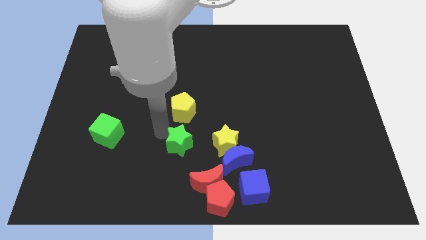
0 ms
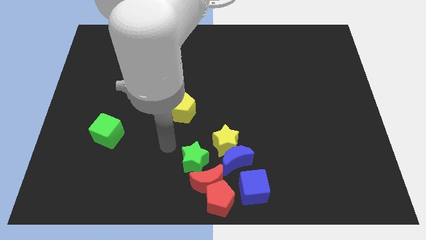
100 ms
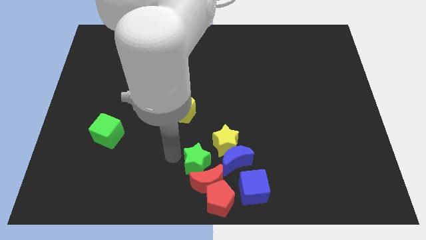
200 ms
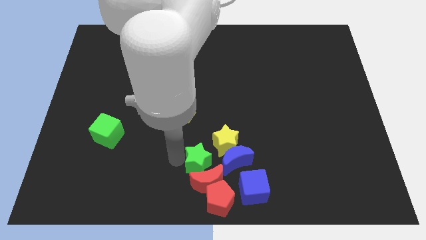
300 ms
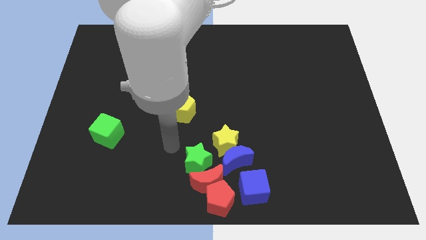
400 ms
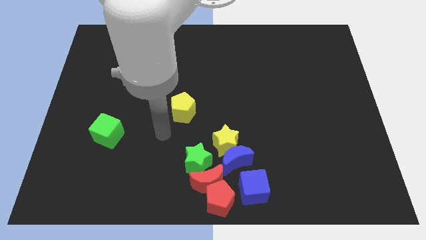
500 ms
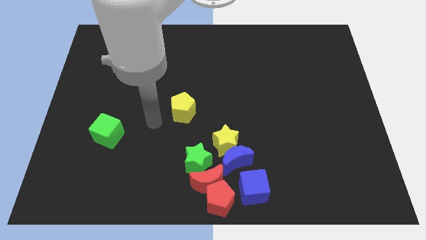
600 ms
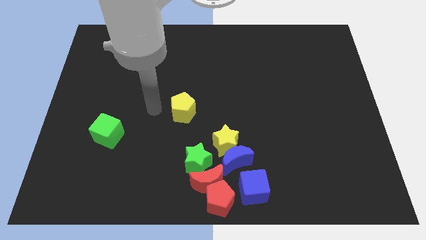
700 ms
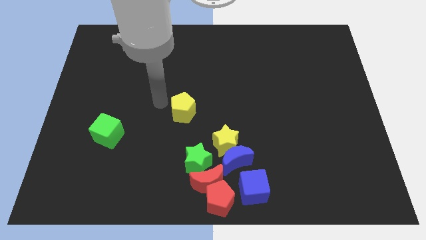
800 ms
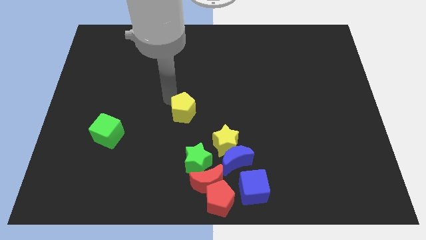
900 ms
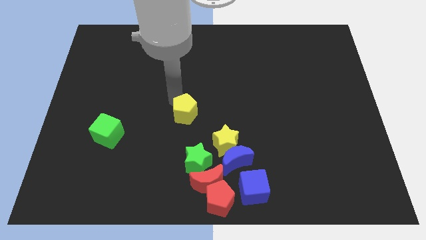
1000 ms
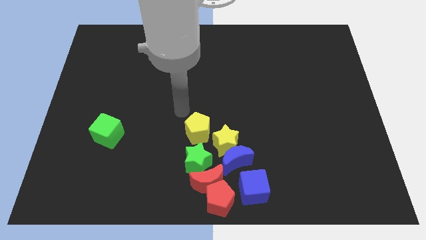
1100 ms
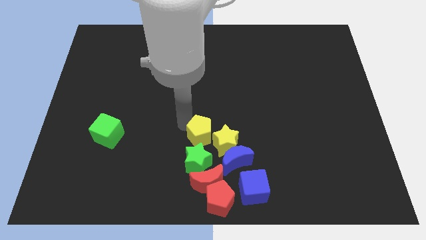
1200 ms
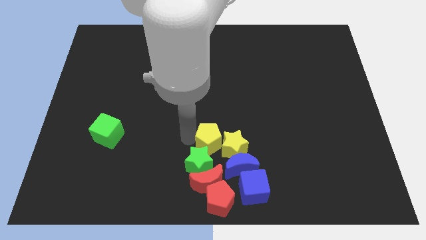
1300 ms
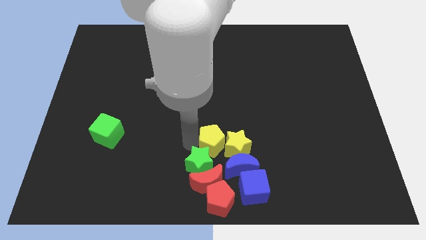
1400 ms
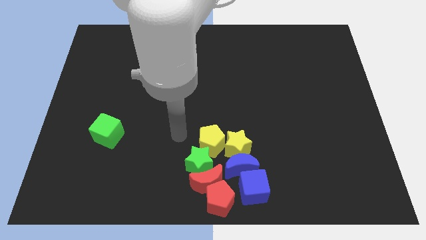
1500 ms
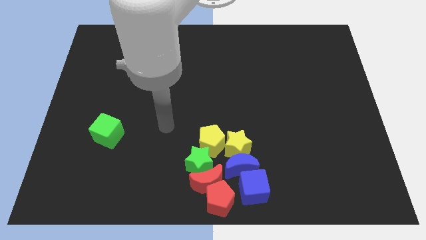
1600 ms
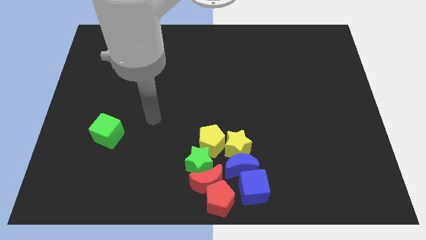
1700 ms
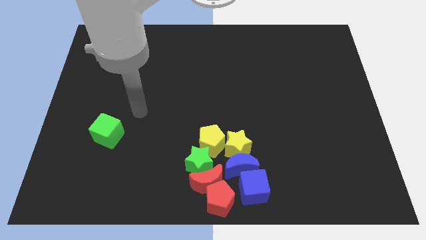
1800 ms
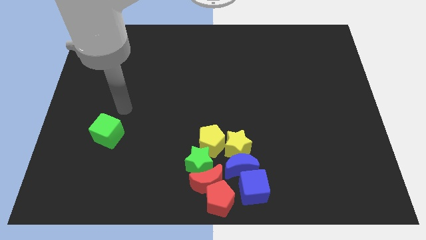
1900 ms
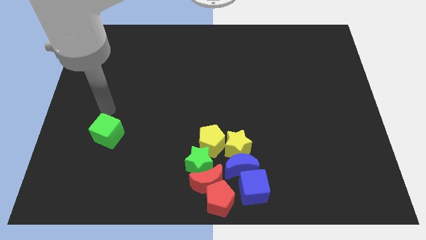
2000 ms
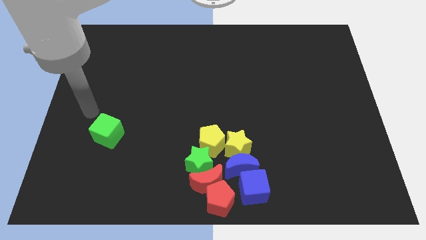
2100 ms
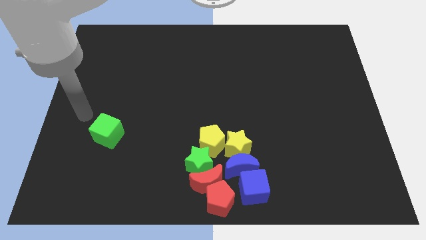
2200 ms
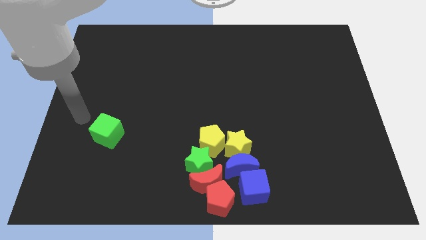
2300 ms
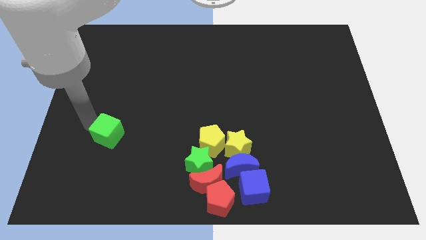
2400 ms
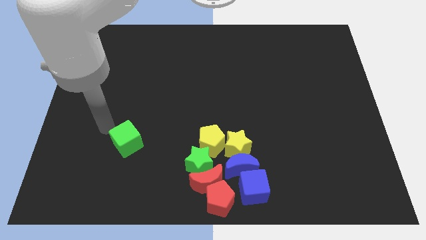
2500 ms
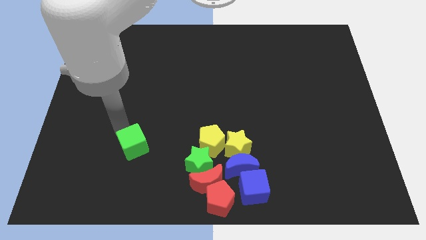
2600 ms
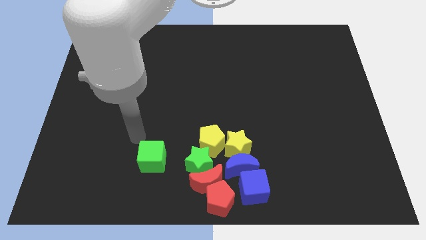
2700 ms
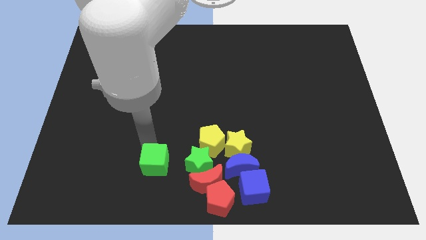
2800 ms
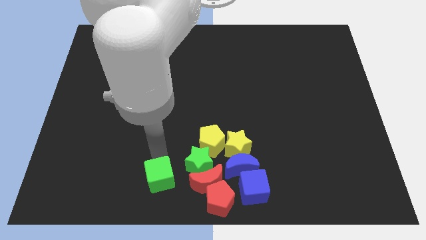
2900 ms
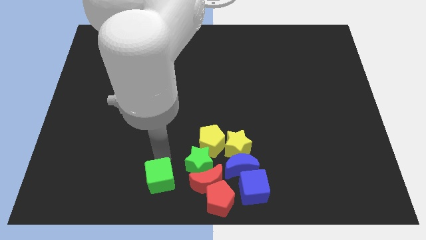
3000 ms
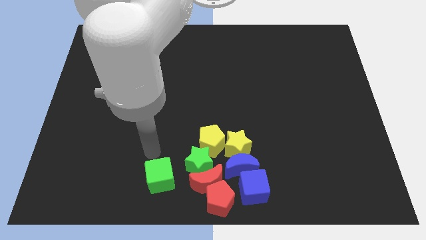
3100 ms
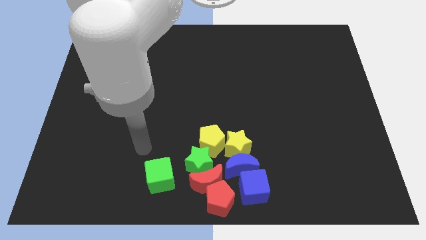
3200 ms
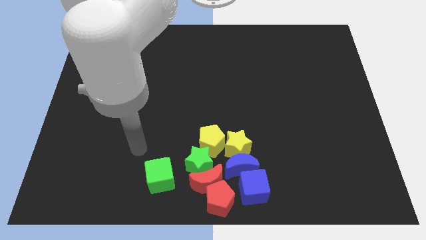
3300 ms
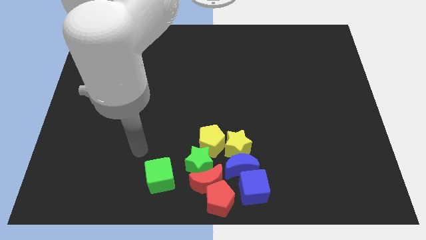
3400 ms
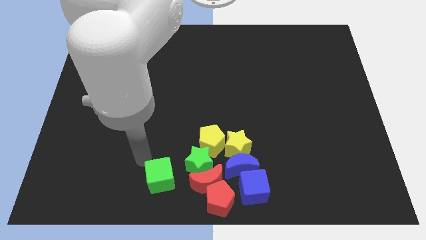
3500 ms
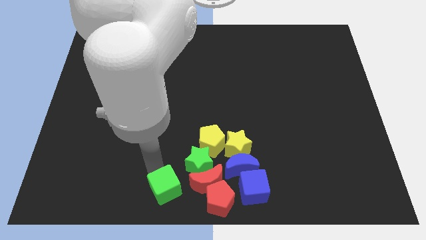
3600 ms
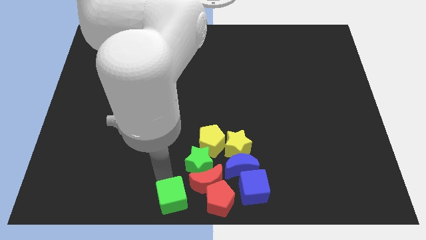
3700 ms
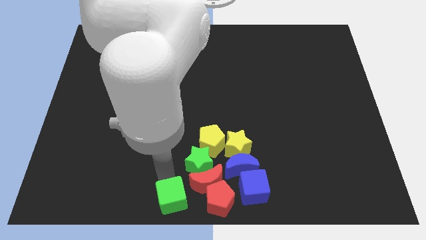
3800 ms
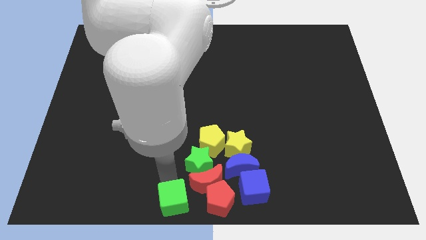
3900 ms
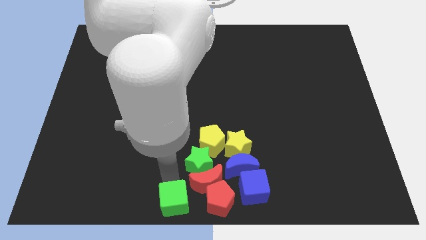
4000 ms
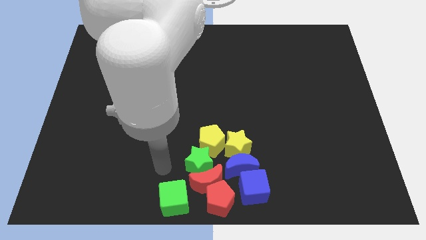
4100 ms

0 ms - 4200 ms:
move the green stargreen cube and the yellow pentagon into the group of blocks

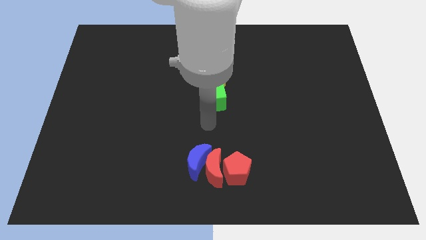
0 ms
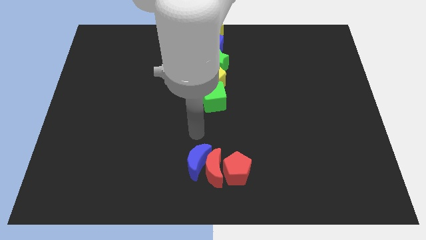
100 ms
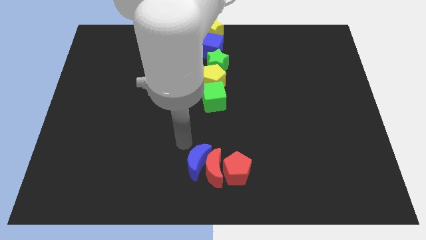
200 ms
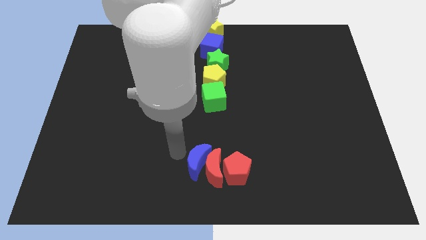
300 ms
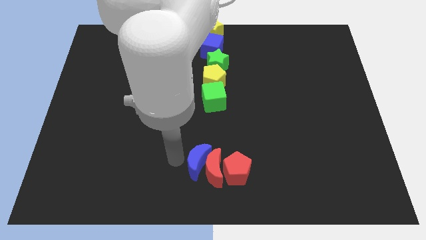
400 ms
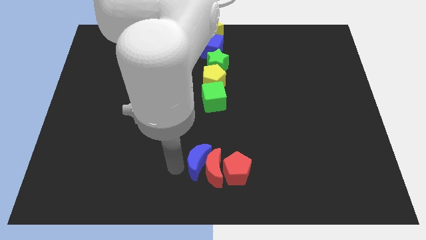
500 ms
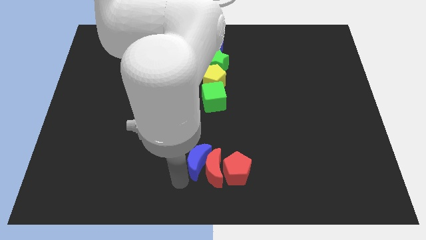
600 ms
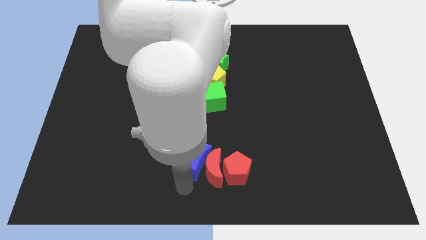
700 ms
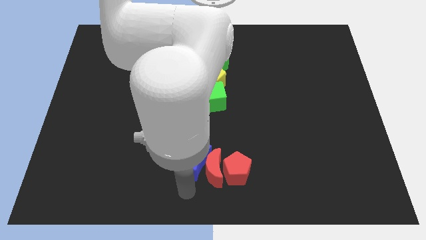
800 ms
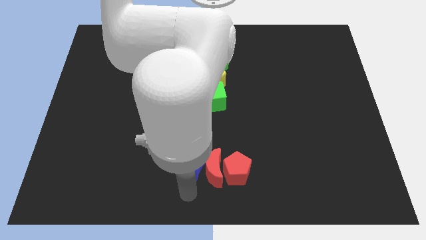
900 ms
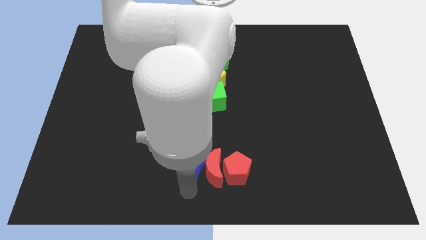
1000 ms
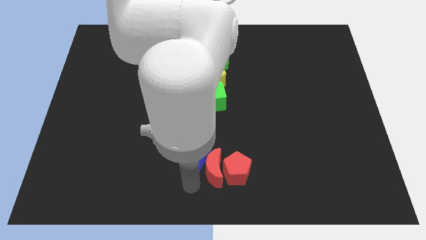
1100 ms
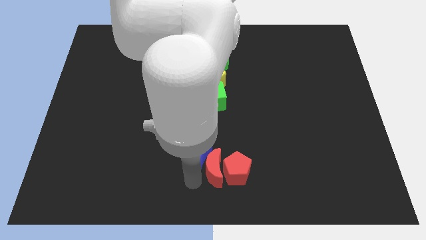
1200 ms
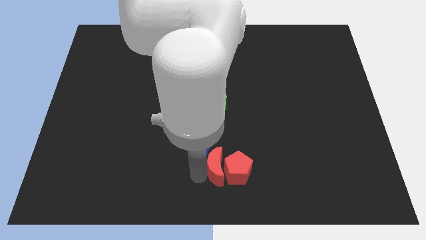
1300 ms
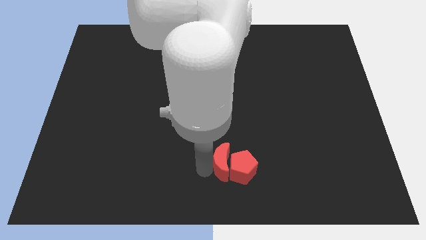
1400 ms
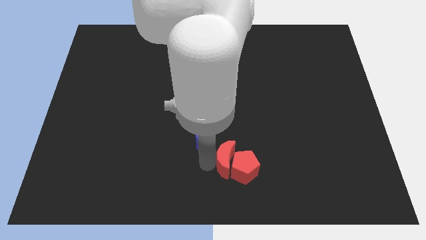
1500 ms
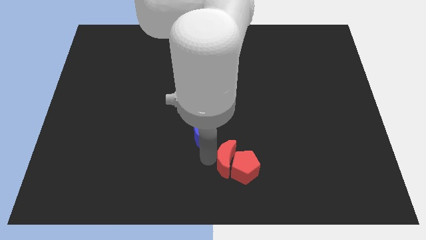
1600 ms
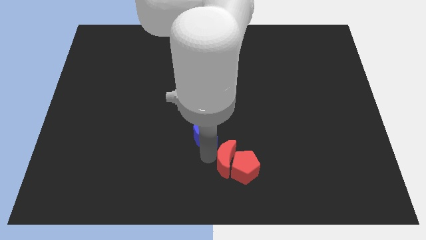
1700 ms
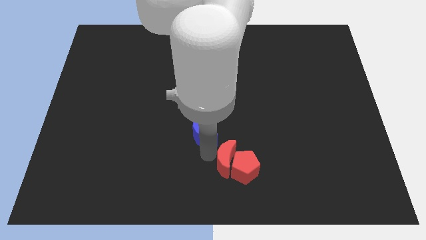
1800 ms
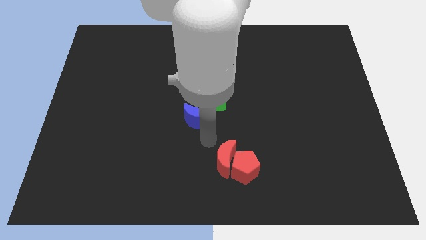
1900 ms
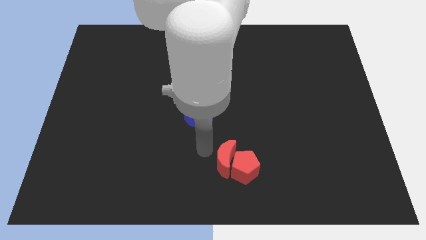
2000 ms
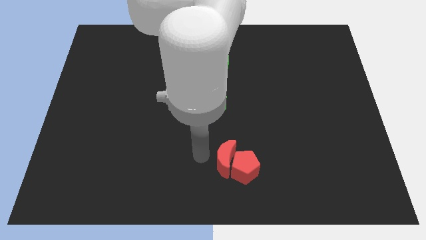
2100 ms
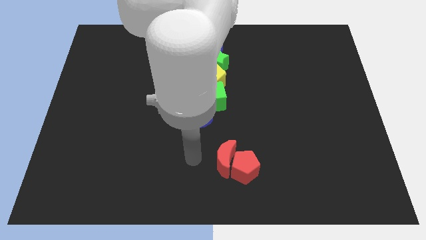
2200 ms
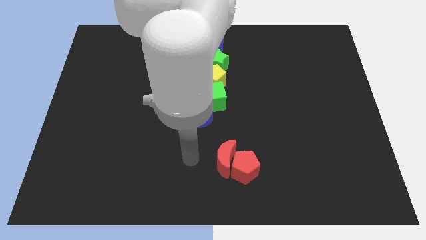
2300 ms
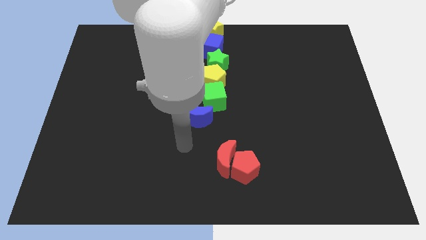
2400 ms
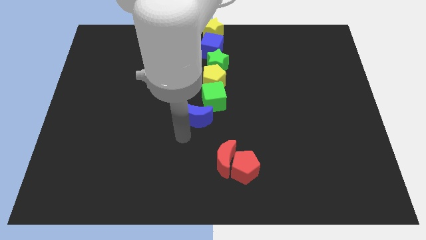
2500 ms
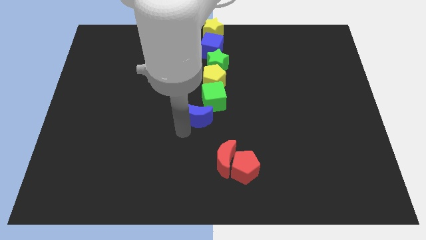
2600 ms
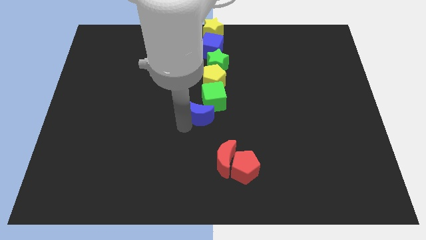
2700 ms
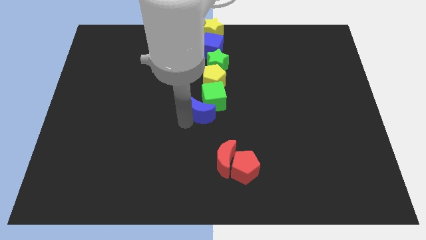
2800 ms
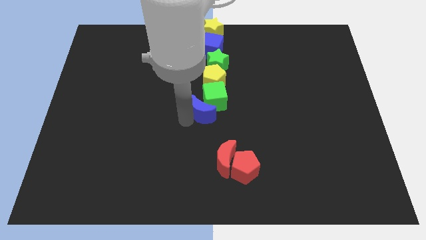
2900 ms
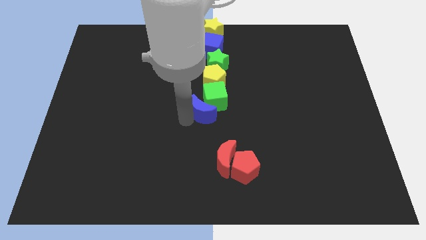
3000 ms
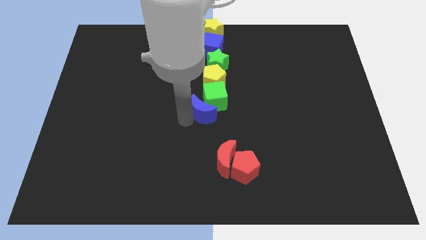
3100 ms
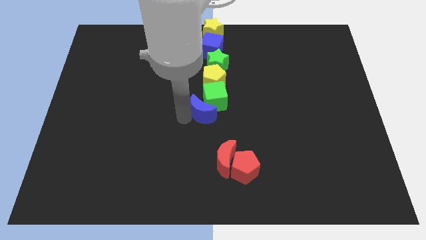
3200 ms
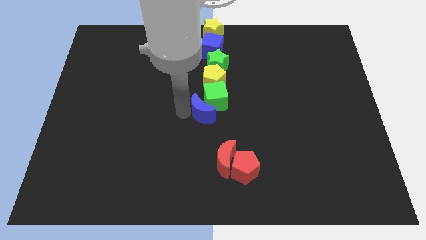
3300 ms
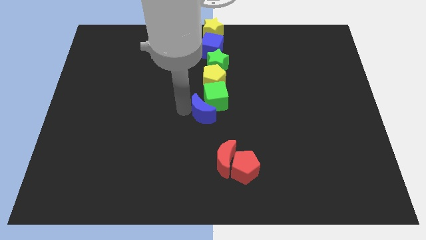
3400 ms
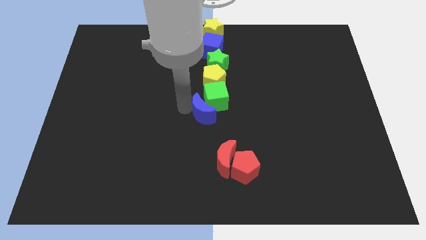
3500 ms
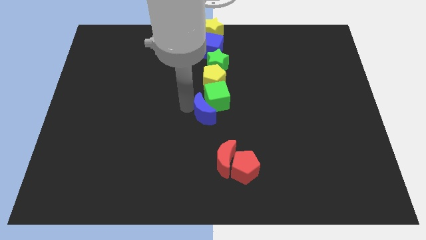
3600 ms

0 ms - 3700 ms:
separate blue moon from the red moon

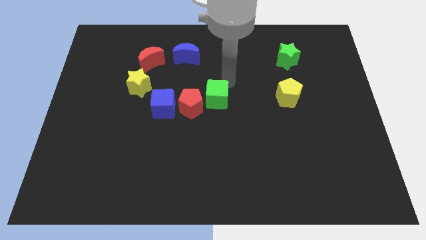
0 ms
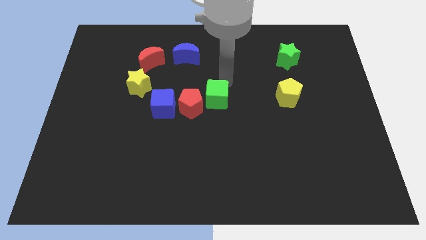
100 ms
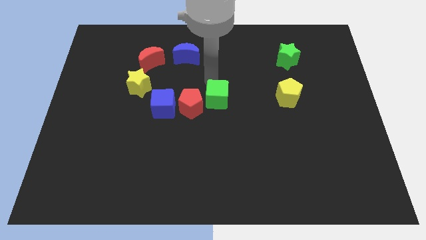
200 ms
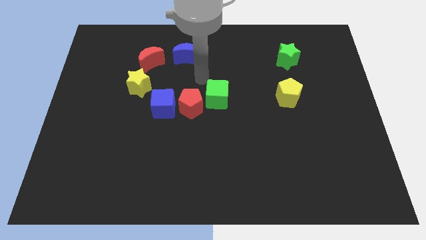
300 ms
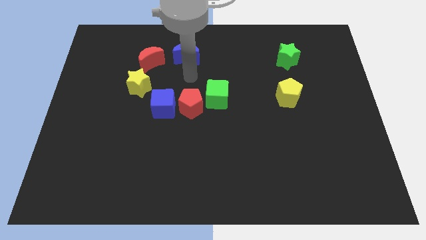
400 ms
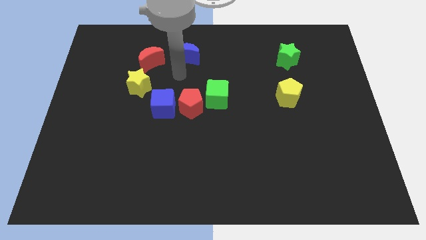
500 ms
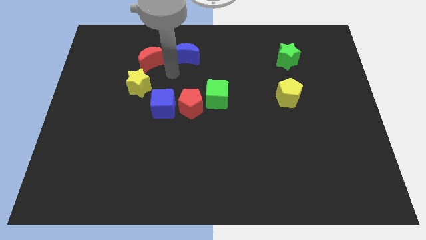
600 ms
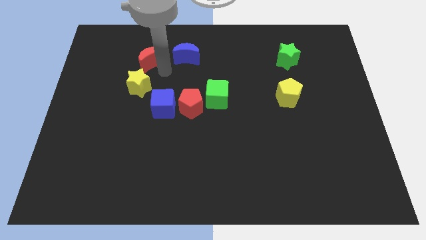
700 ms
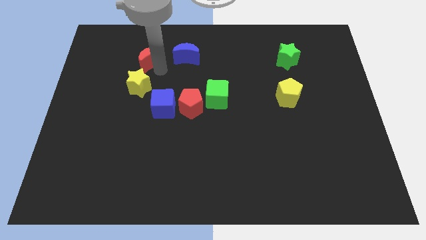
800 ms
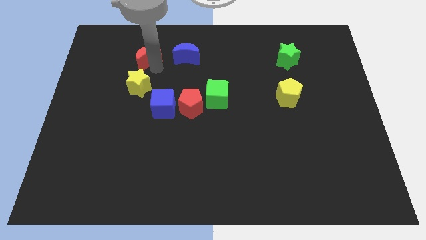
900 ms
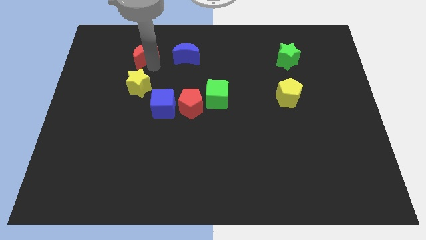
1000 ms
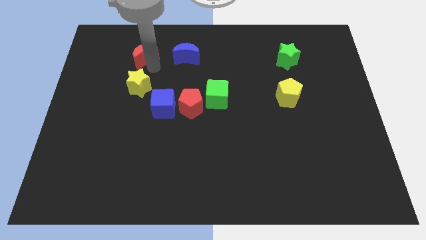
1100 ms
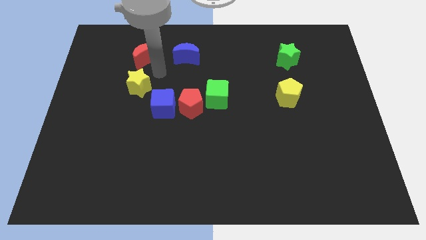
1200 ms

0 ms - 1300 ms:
push the red crescent slightly up
